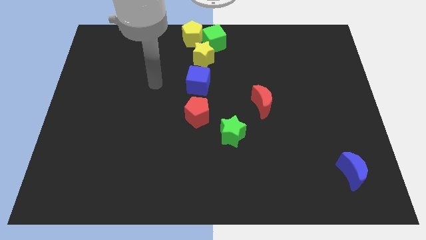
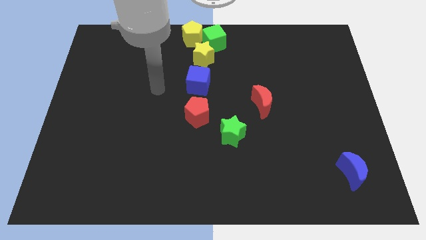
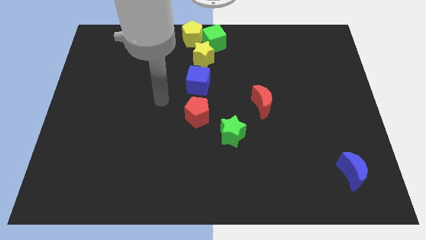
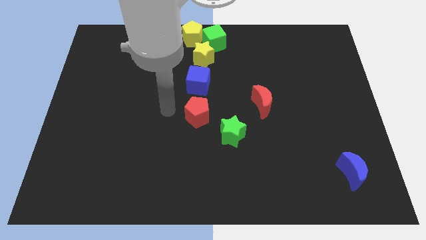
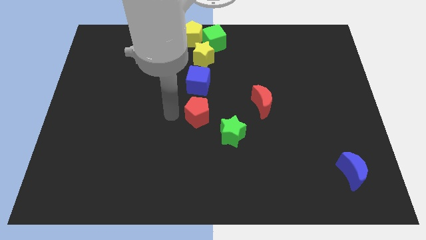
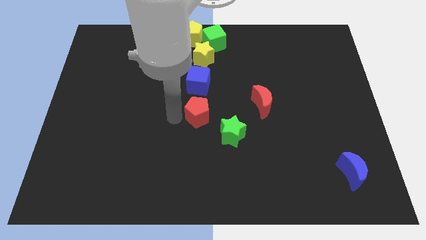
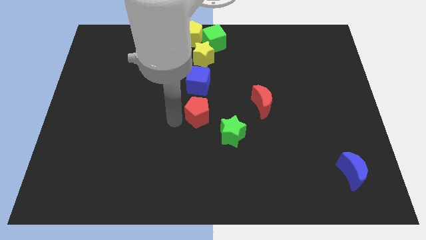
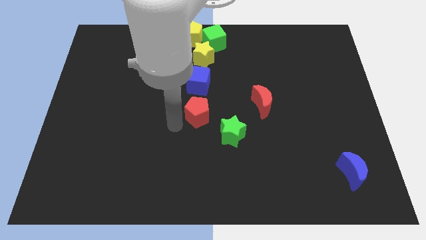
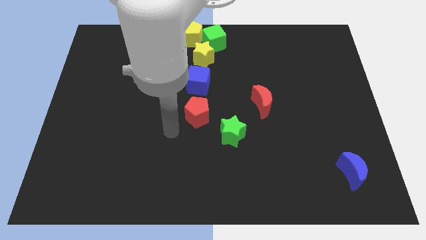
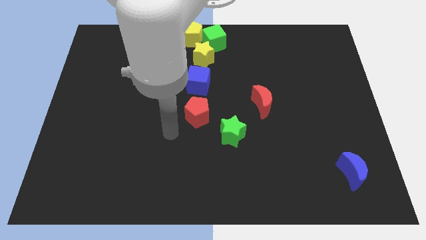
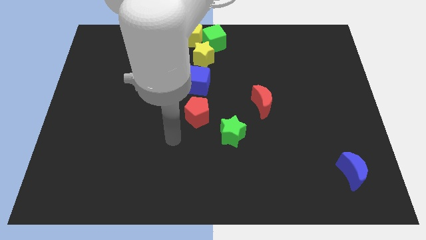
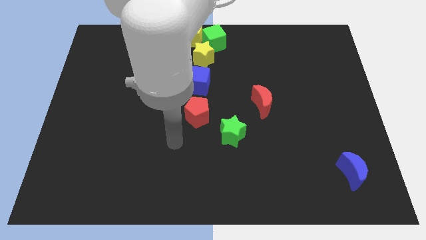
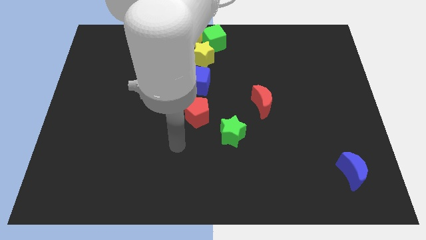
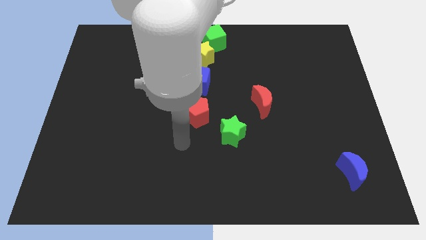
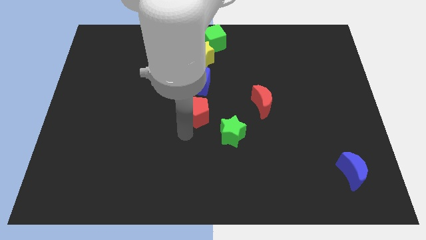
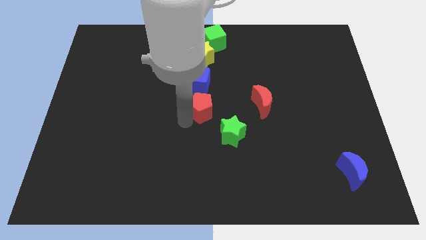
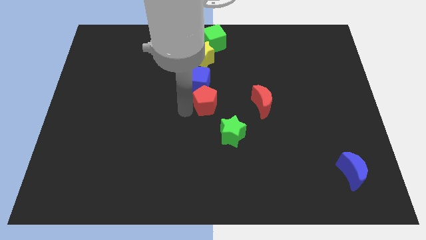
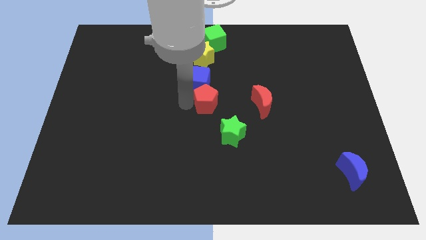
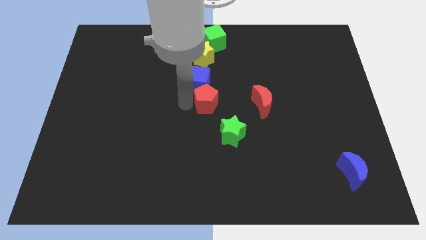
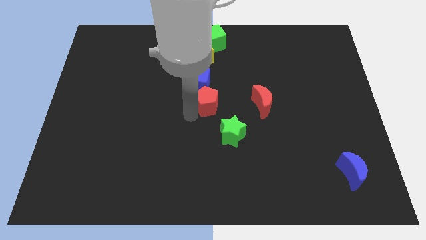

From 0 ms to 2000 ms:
move the red pentagon to the right bottom of the blue cube

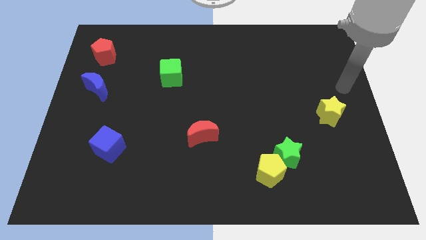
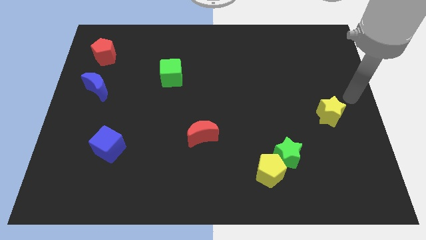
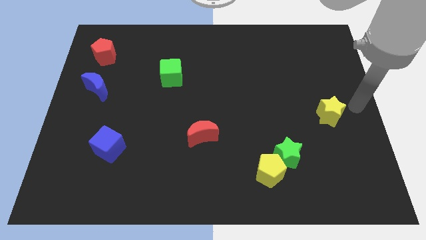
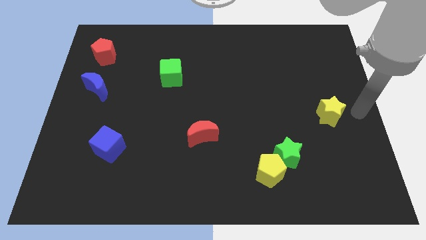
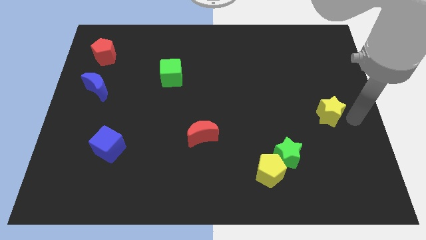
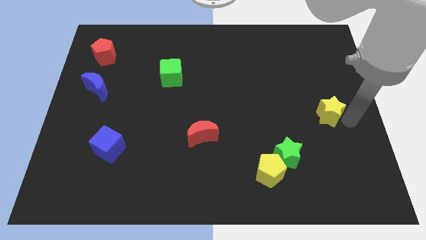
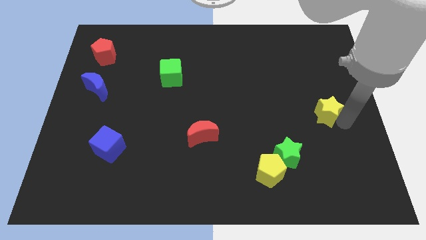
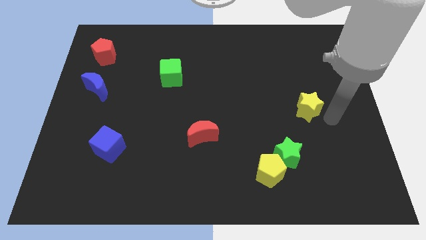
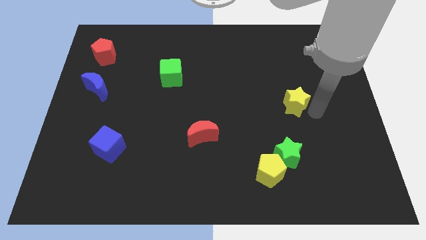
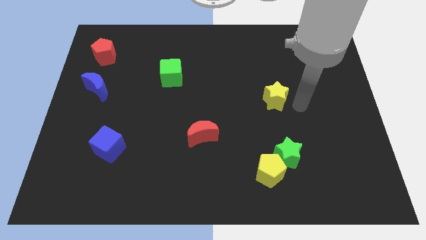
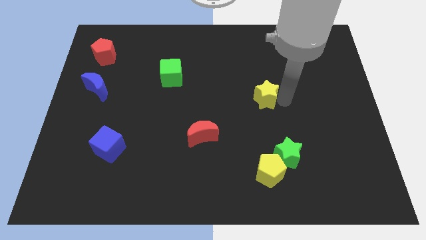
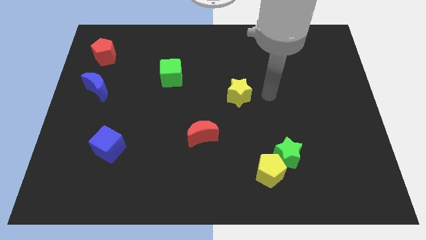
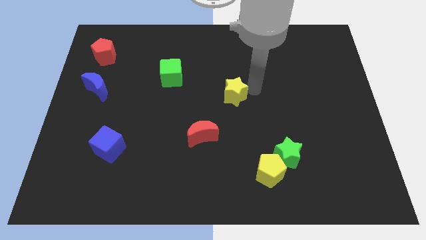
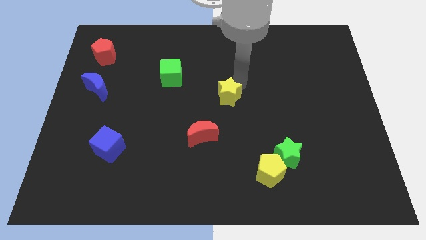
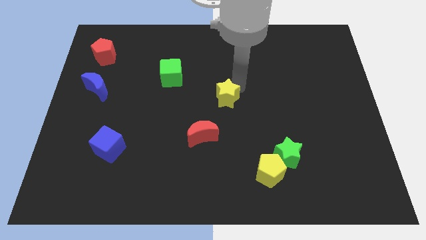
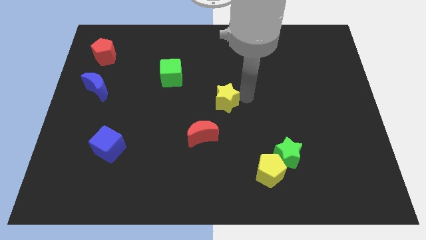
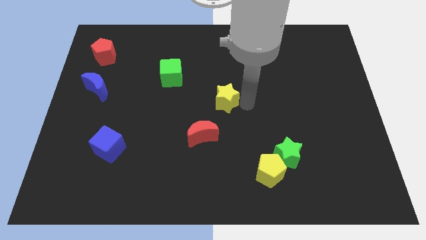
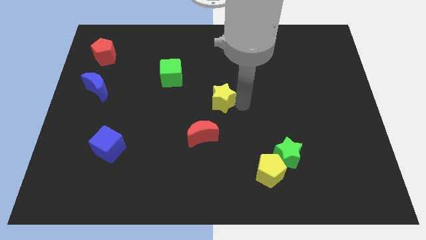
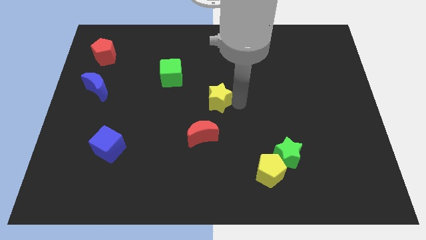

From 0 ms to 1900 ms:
push the yellow star towards the red crescent

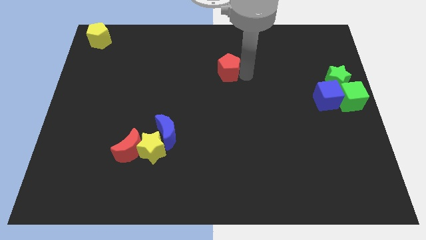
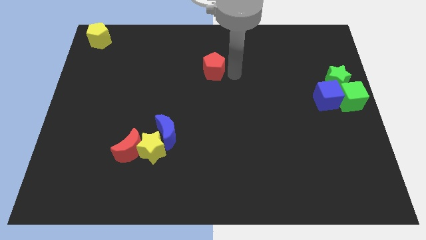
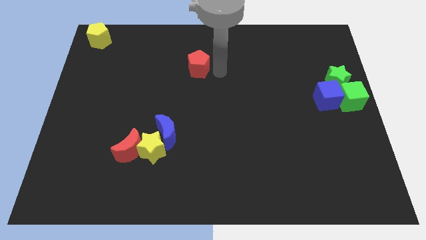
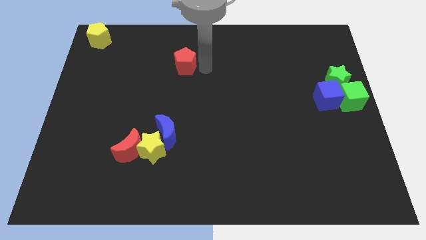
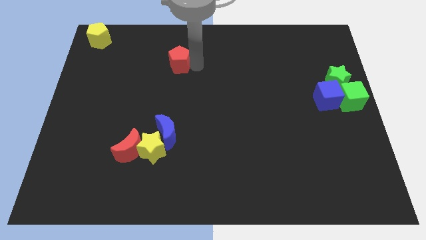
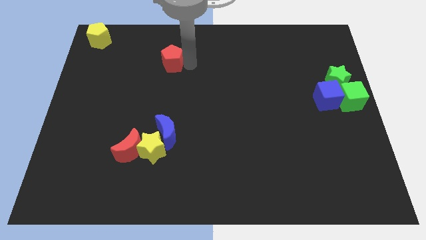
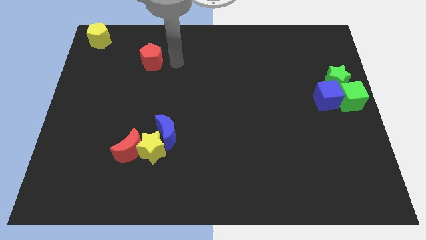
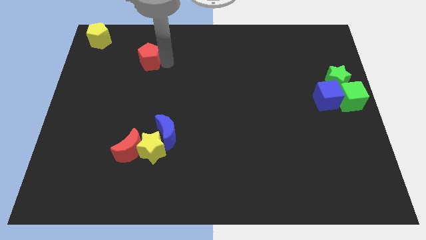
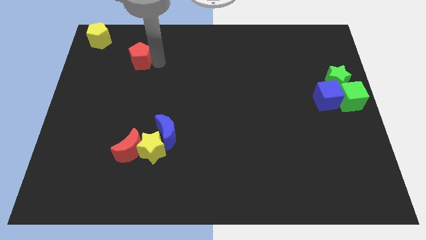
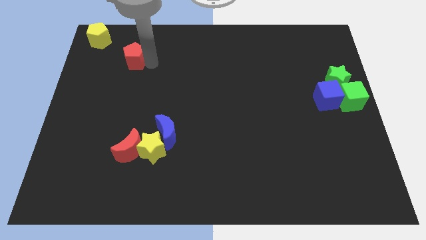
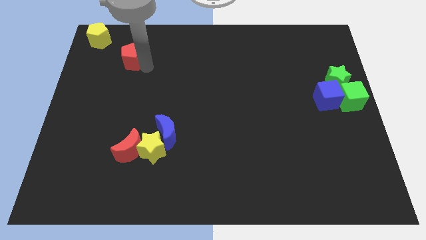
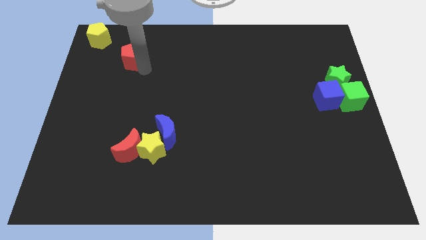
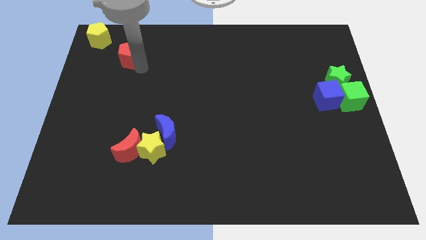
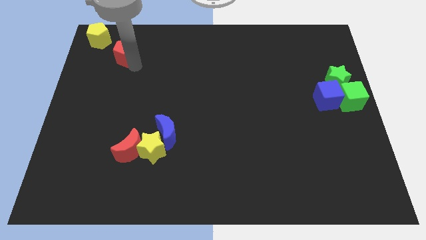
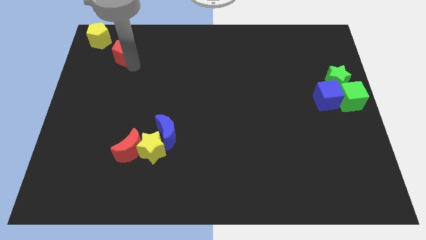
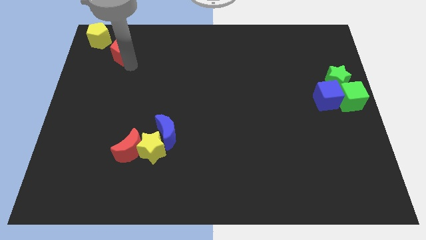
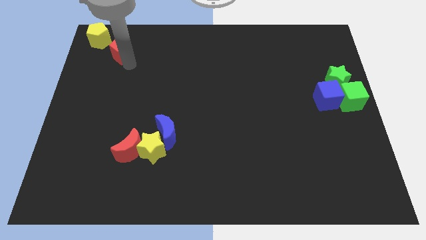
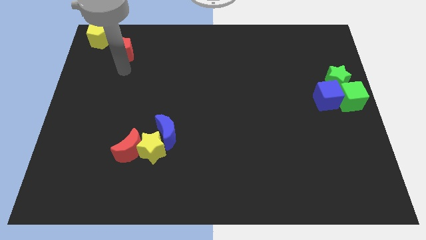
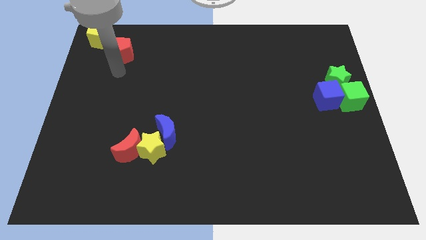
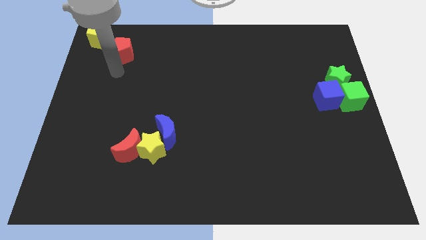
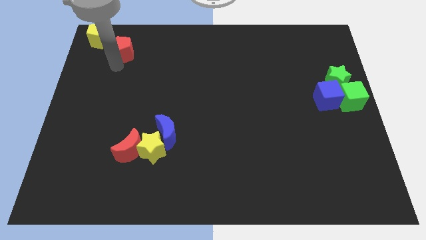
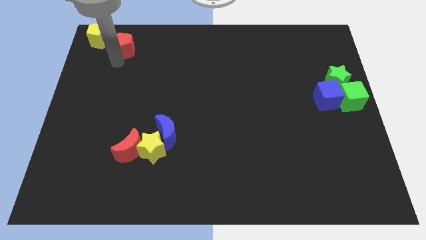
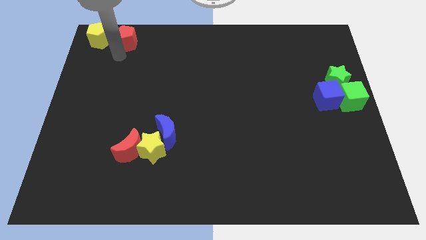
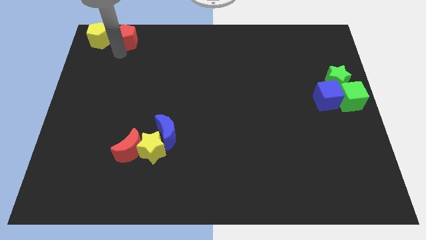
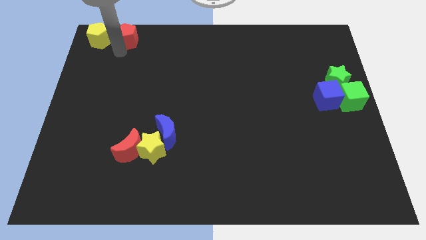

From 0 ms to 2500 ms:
move the red pentagon to the right of the yellow pentagon

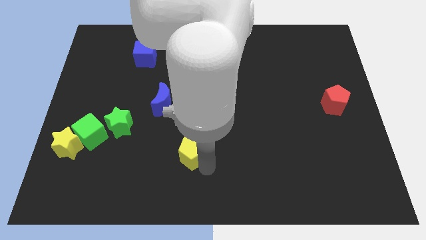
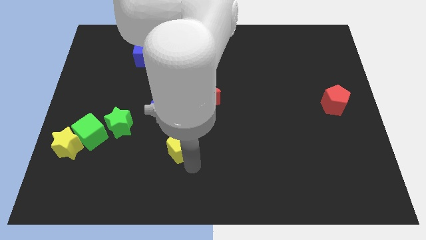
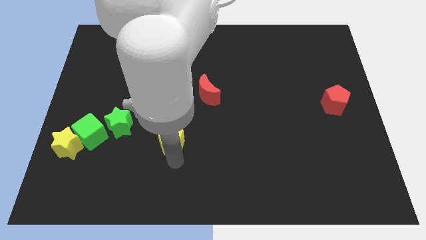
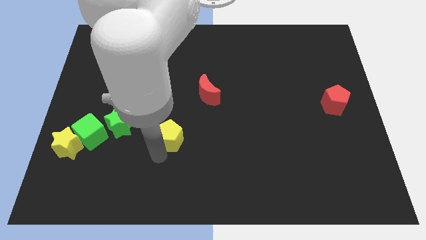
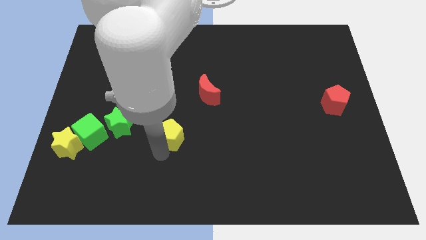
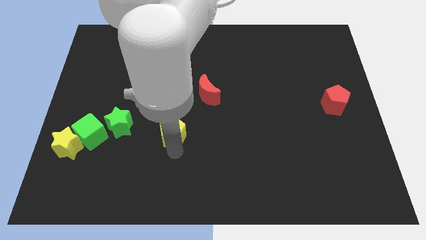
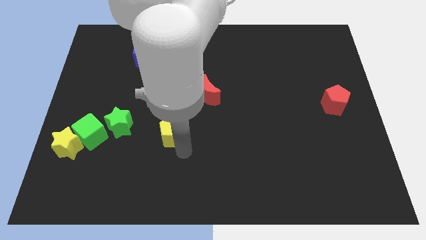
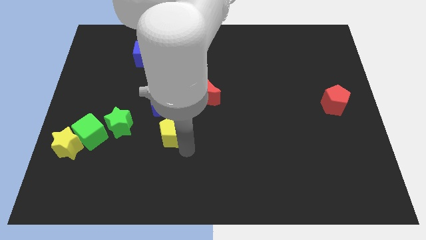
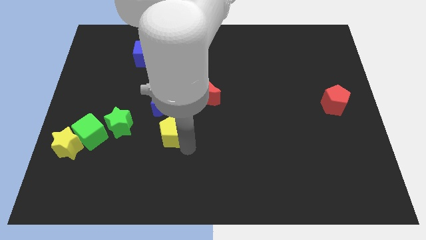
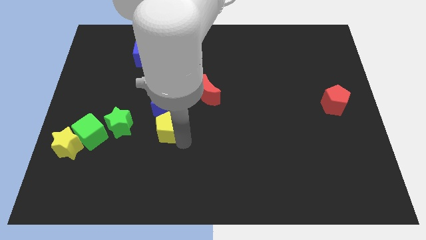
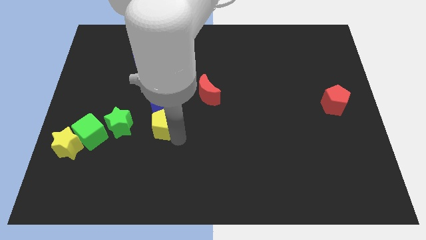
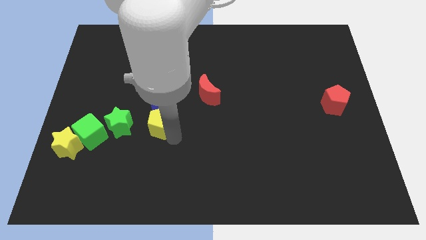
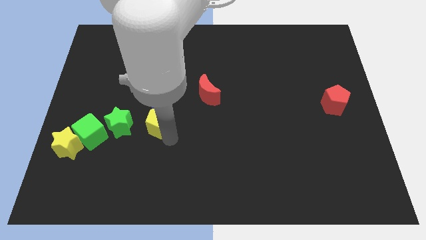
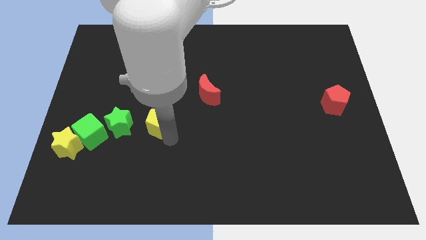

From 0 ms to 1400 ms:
move yellow pentagon below the blue cube

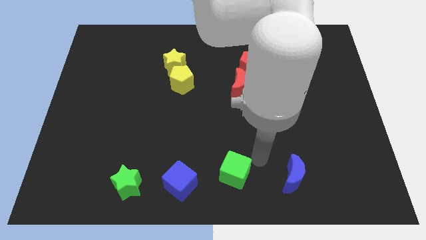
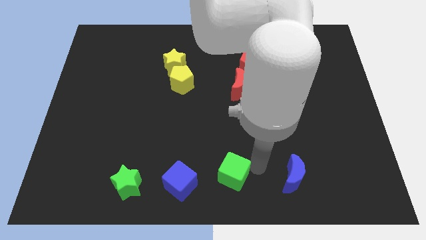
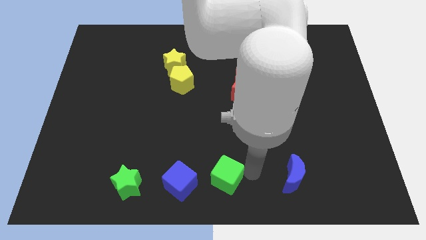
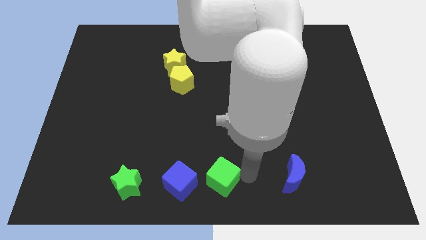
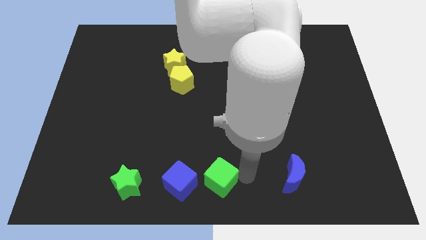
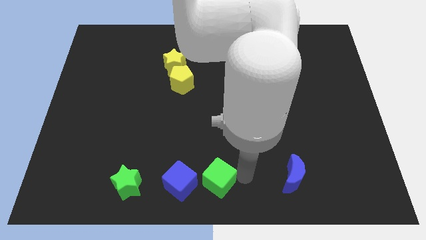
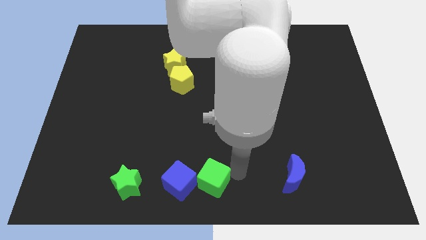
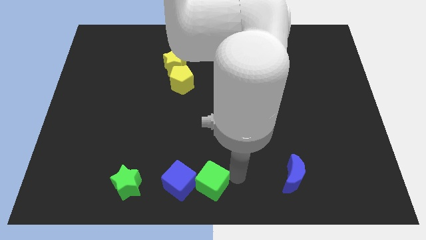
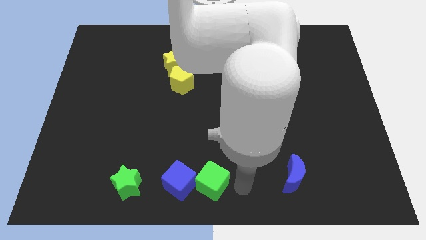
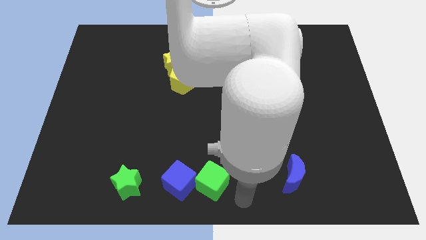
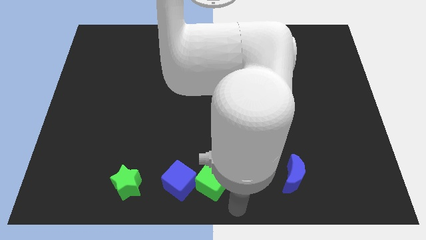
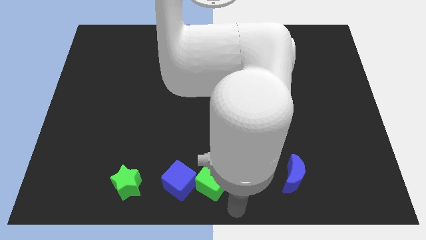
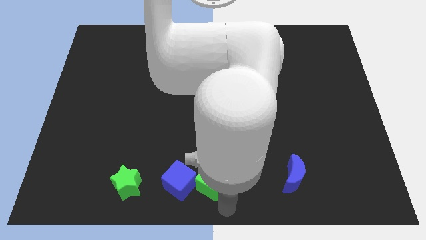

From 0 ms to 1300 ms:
push the green cube into blue cube
